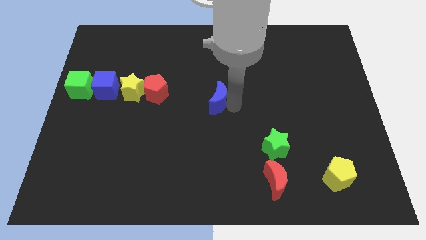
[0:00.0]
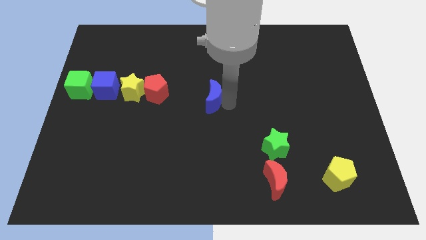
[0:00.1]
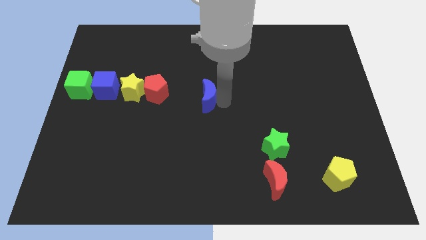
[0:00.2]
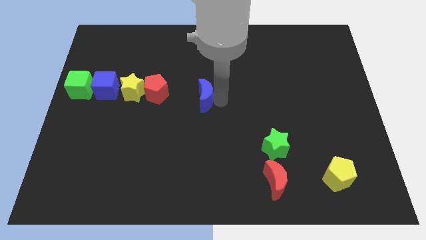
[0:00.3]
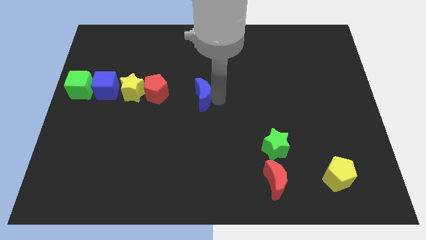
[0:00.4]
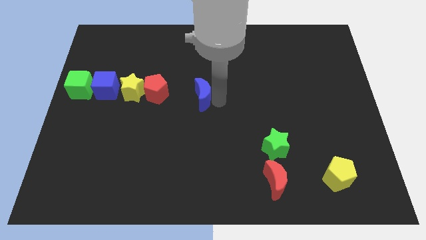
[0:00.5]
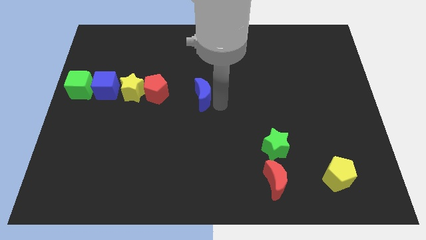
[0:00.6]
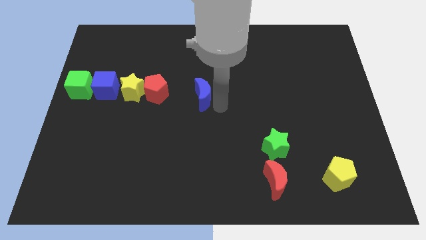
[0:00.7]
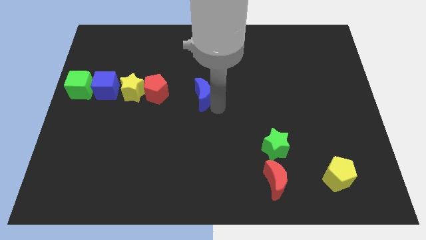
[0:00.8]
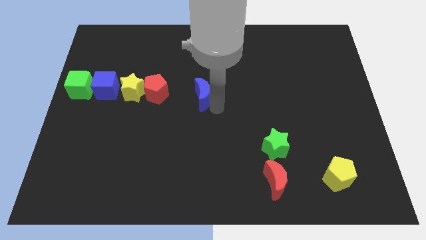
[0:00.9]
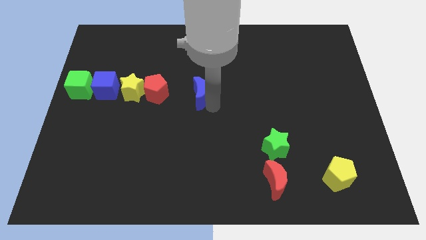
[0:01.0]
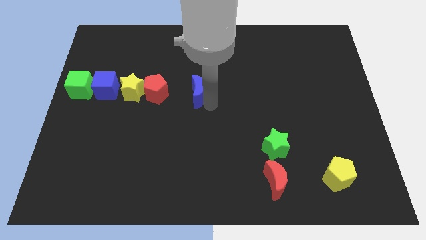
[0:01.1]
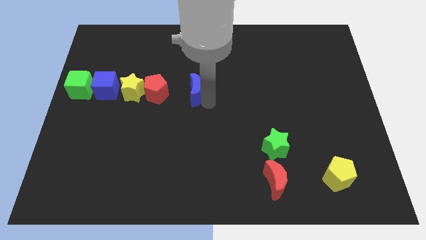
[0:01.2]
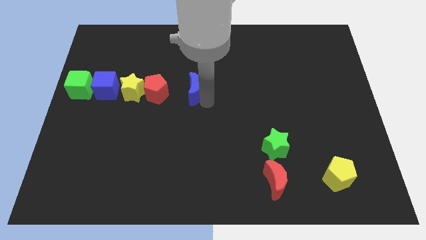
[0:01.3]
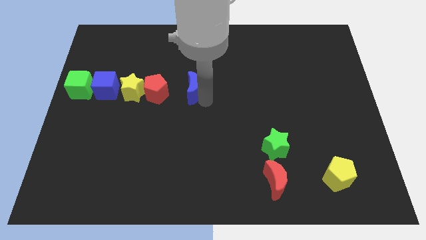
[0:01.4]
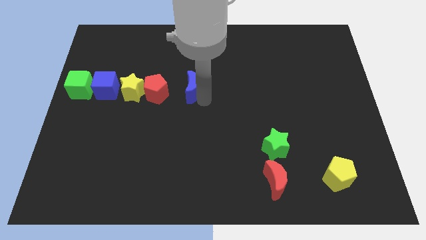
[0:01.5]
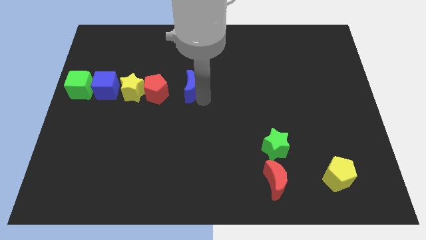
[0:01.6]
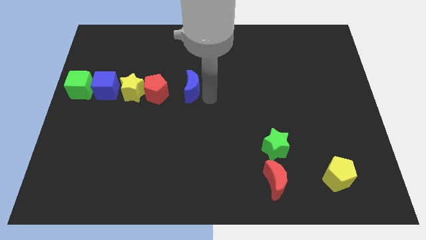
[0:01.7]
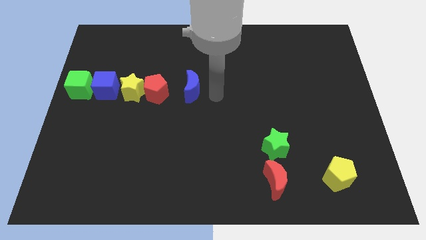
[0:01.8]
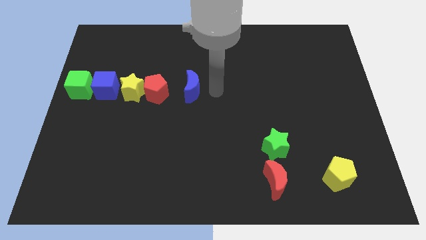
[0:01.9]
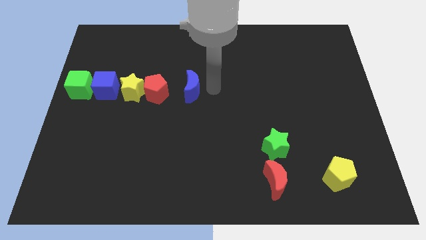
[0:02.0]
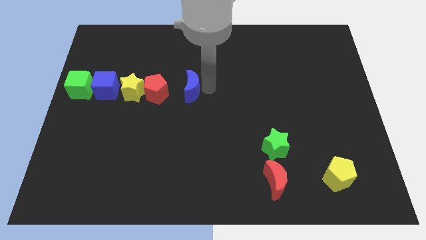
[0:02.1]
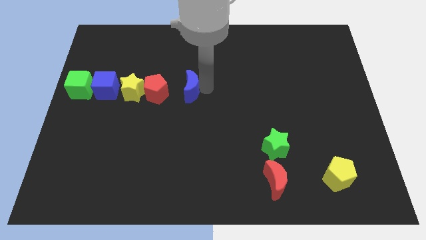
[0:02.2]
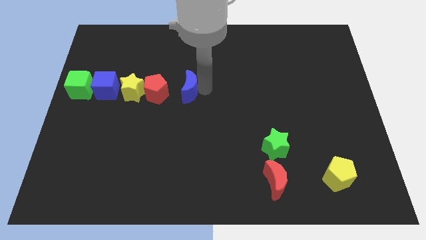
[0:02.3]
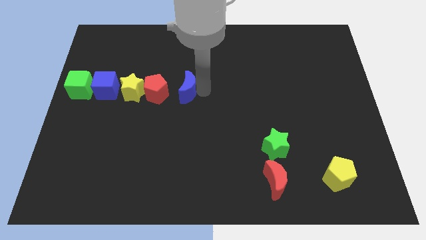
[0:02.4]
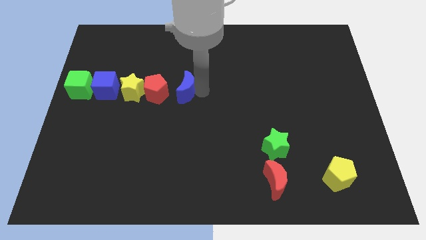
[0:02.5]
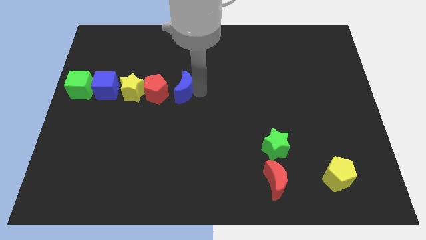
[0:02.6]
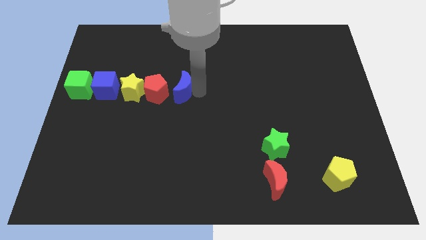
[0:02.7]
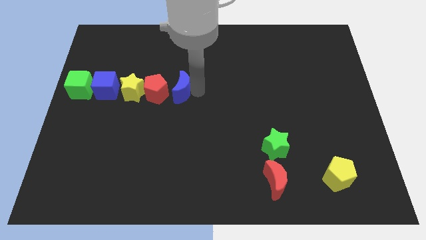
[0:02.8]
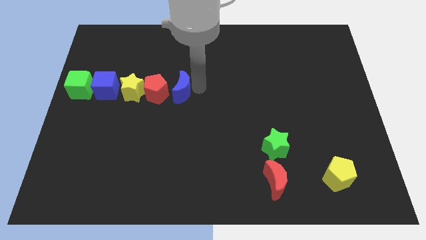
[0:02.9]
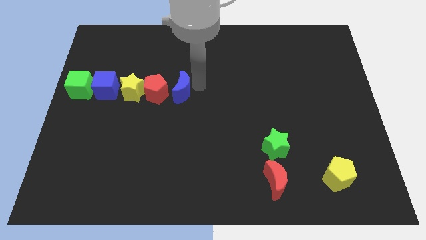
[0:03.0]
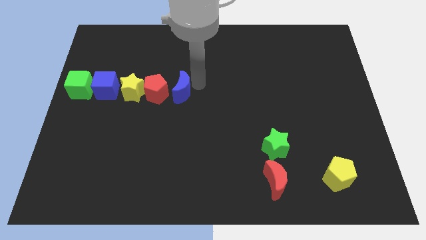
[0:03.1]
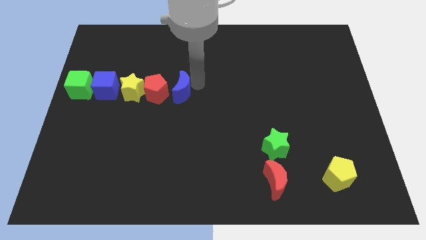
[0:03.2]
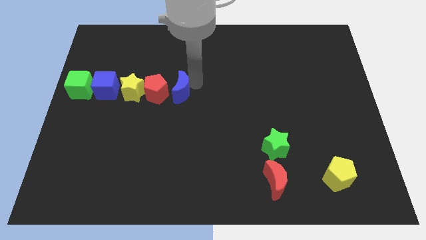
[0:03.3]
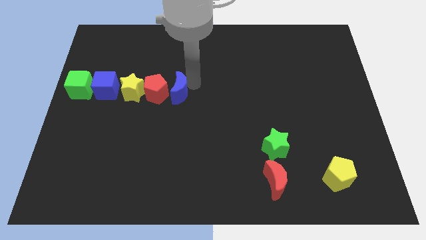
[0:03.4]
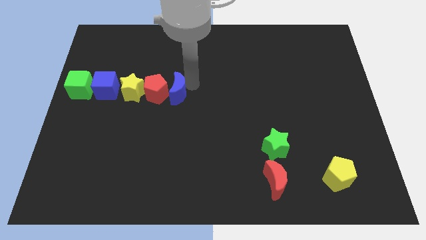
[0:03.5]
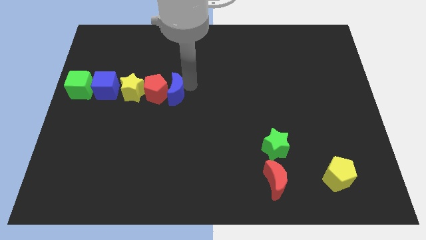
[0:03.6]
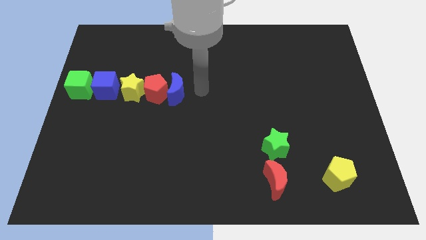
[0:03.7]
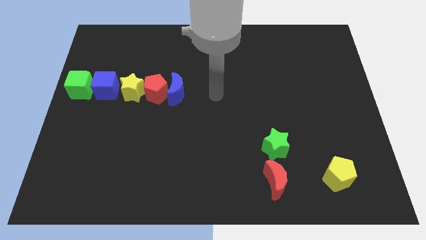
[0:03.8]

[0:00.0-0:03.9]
place the blue moon to the right of the red pentagon

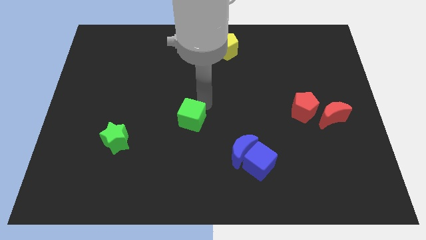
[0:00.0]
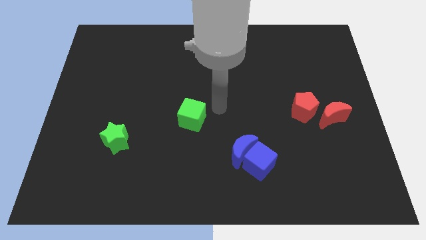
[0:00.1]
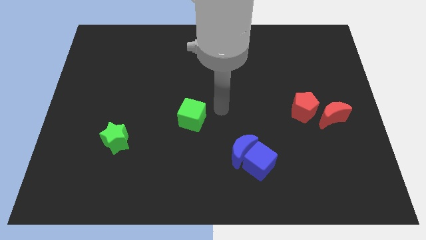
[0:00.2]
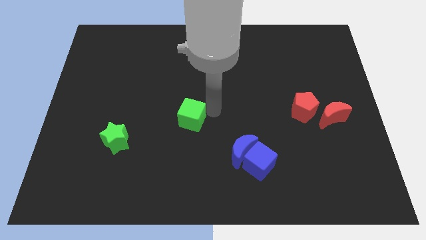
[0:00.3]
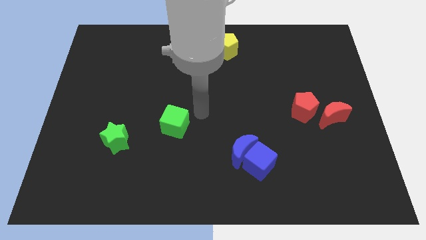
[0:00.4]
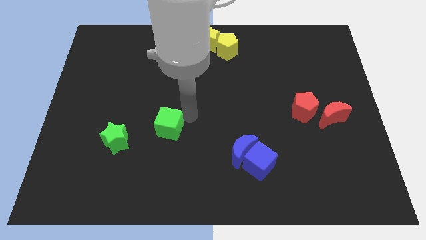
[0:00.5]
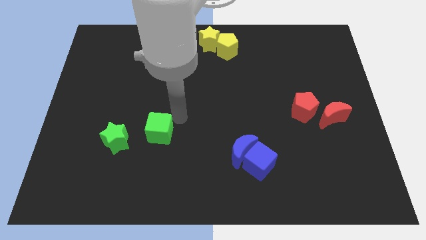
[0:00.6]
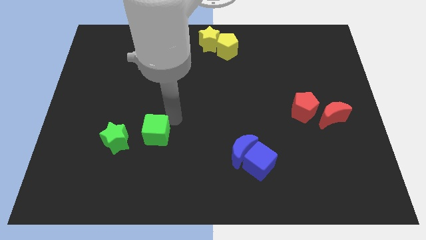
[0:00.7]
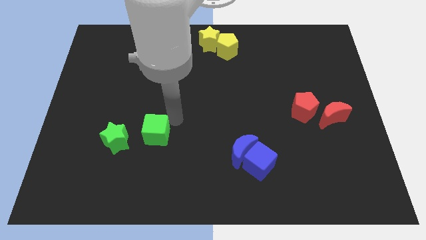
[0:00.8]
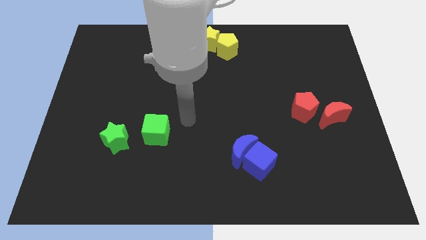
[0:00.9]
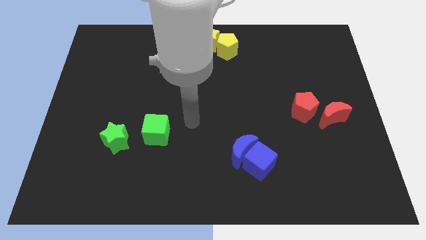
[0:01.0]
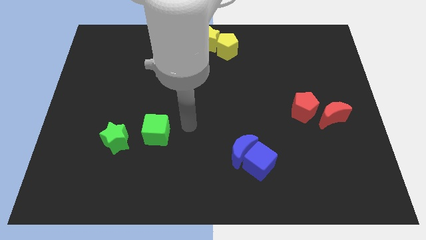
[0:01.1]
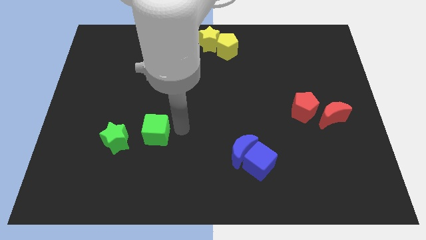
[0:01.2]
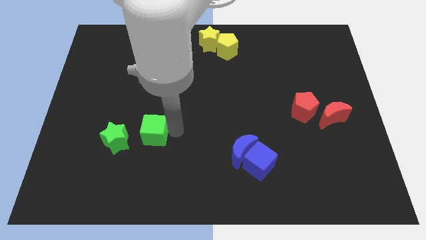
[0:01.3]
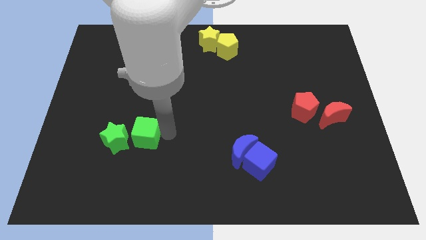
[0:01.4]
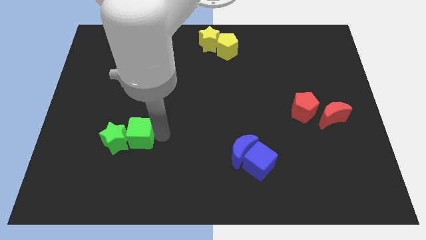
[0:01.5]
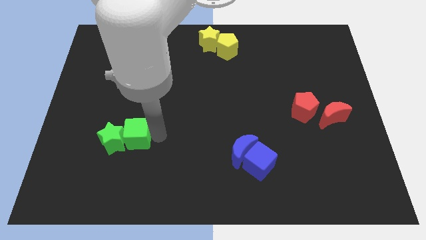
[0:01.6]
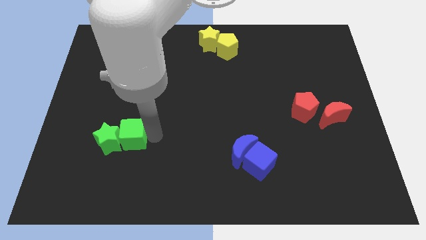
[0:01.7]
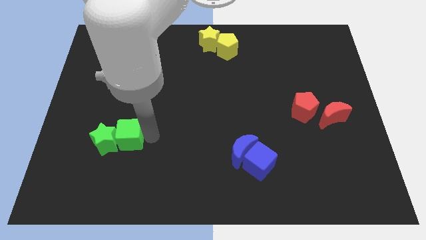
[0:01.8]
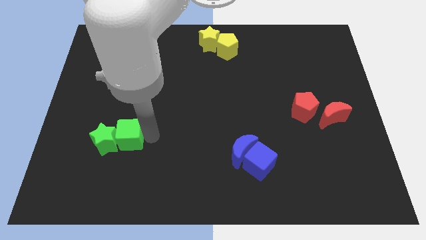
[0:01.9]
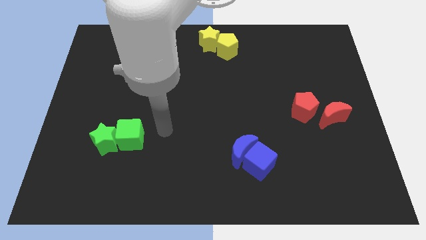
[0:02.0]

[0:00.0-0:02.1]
place the green cube close to green star

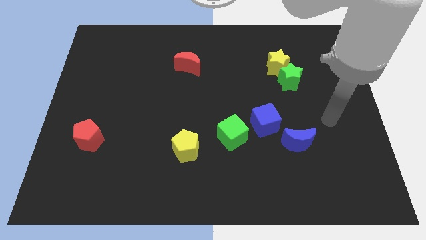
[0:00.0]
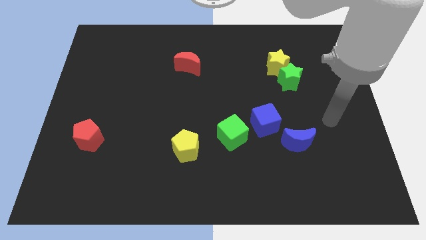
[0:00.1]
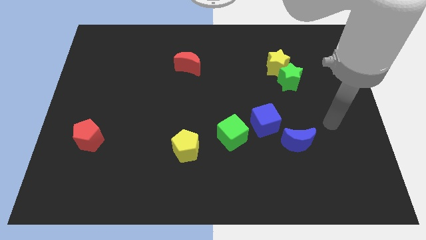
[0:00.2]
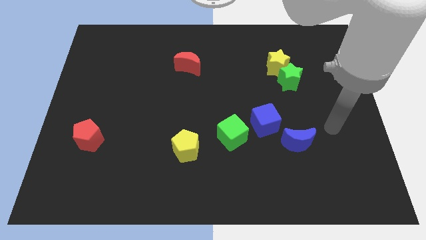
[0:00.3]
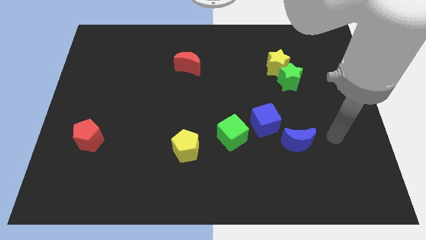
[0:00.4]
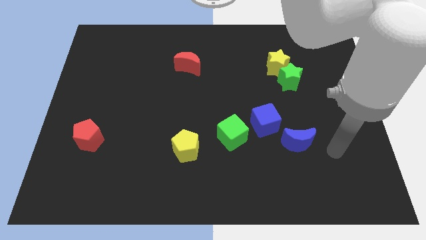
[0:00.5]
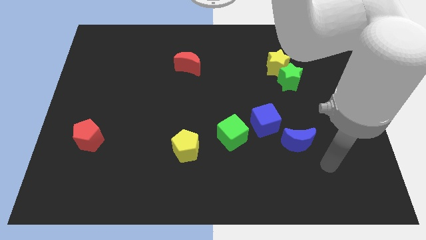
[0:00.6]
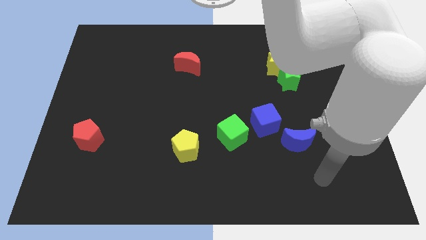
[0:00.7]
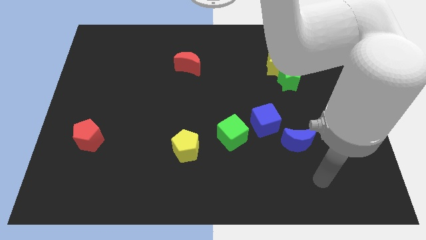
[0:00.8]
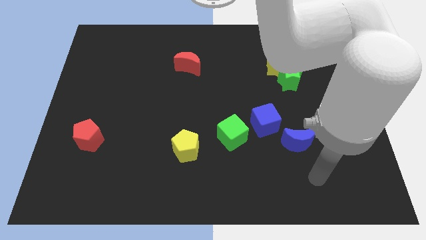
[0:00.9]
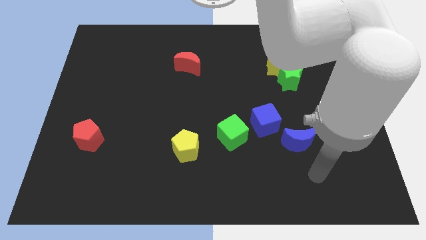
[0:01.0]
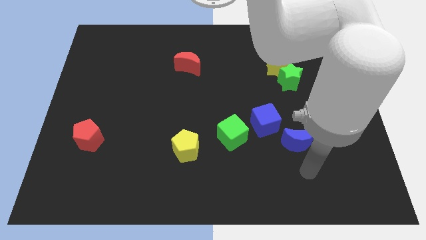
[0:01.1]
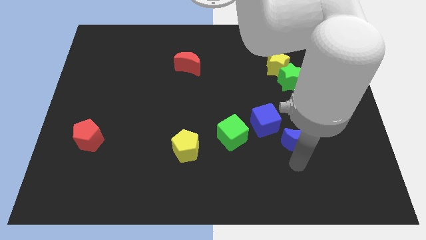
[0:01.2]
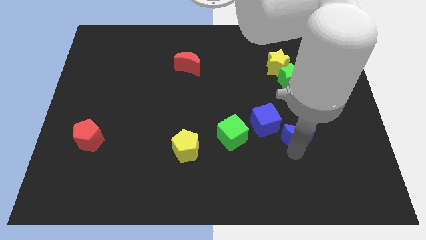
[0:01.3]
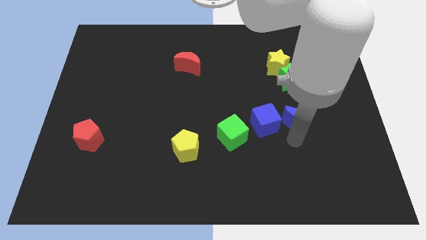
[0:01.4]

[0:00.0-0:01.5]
move your arm into the blue moon

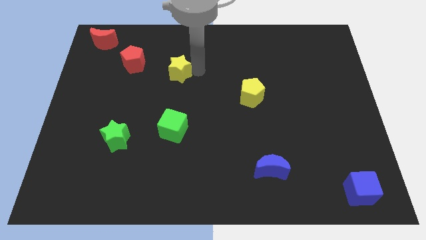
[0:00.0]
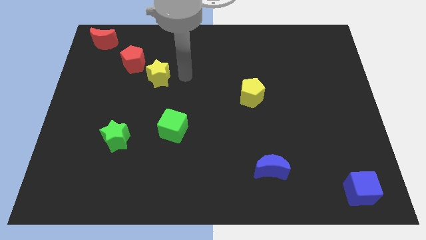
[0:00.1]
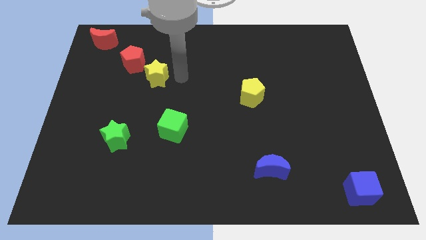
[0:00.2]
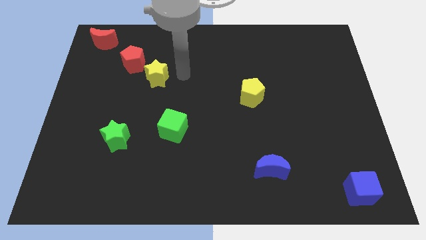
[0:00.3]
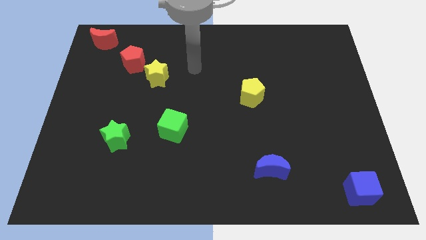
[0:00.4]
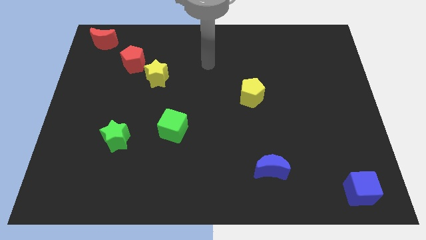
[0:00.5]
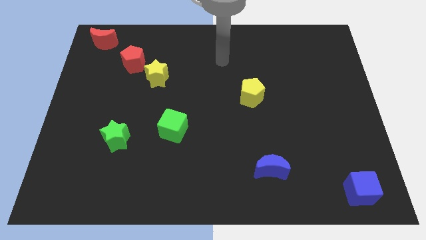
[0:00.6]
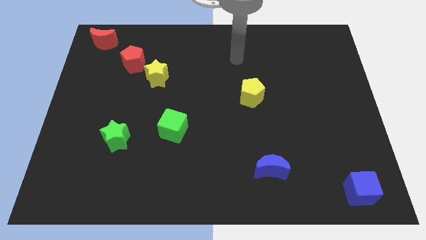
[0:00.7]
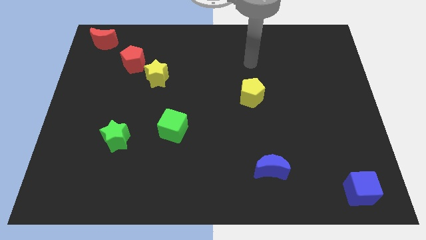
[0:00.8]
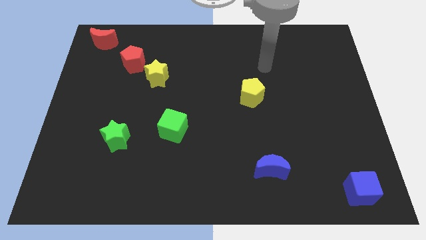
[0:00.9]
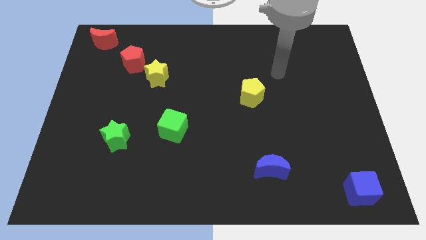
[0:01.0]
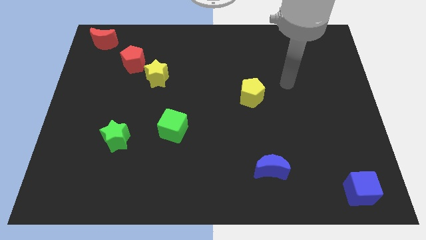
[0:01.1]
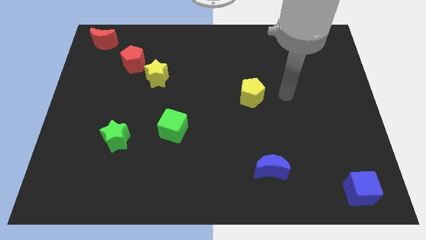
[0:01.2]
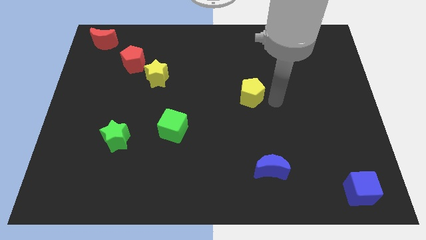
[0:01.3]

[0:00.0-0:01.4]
push the yellow star close to the red pentagon
